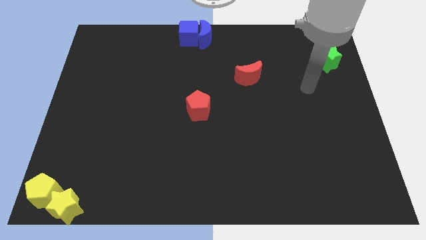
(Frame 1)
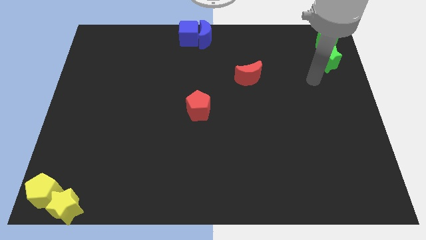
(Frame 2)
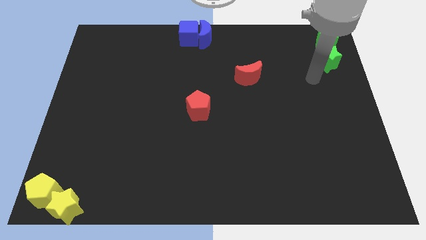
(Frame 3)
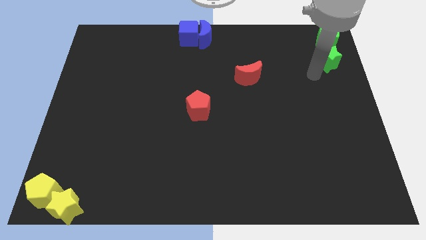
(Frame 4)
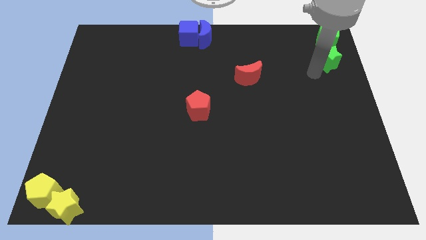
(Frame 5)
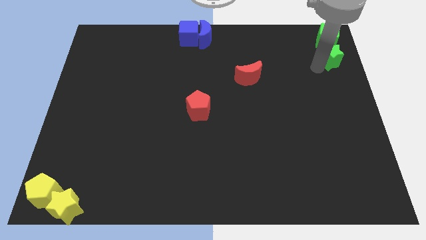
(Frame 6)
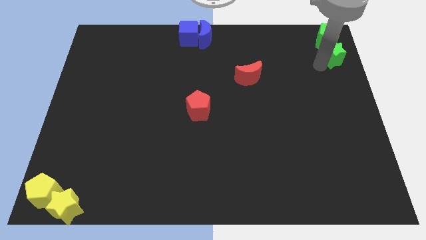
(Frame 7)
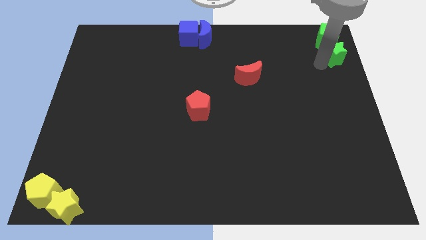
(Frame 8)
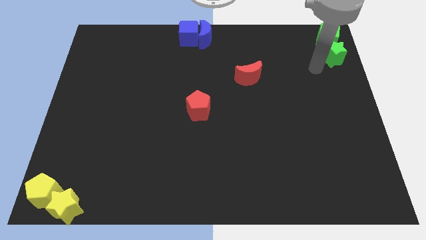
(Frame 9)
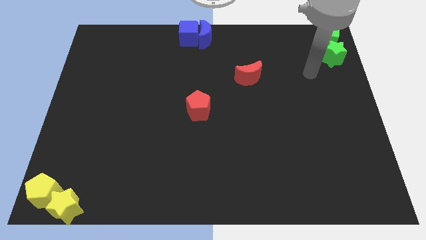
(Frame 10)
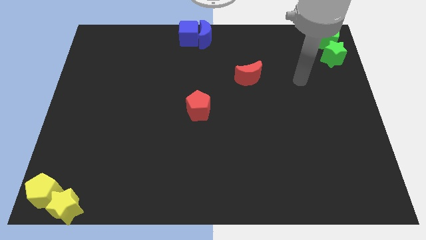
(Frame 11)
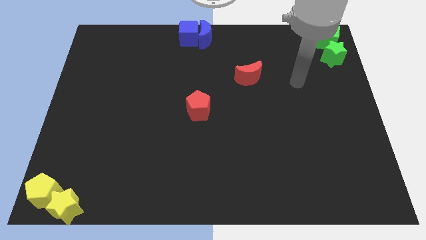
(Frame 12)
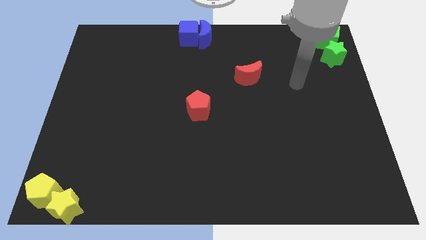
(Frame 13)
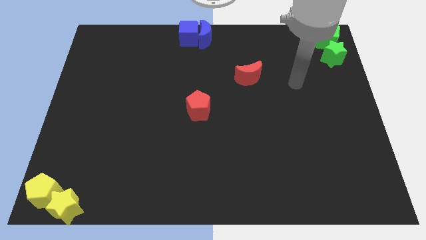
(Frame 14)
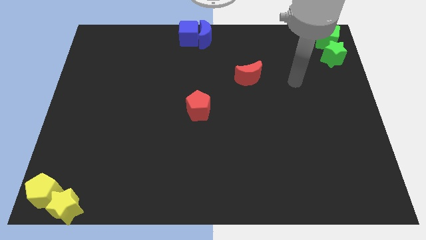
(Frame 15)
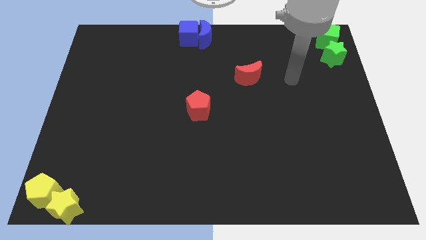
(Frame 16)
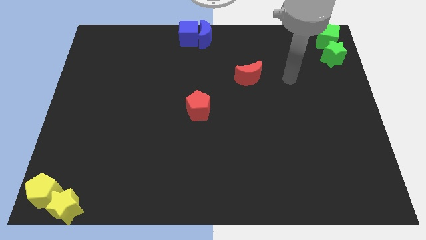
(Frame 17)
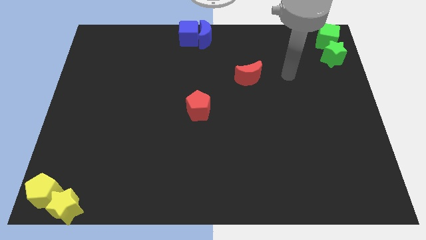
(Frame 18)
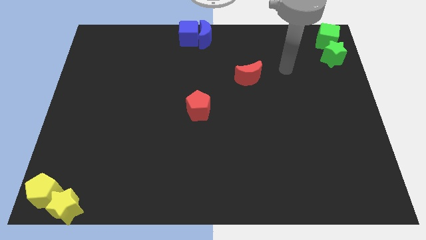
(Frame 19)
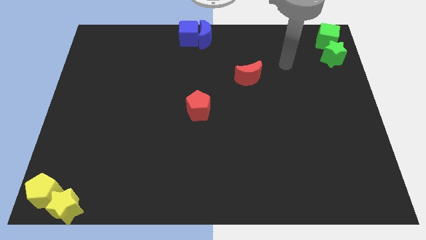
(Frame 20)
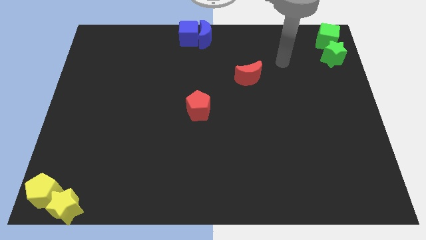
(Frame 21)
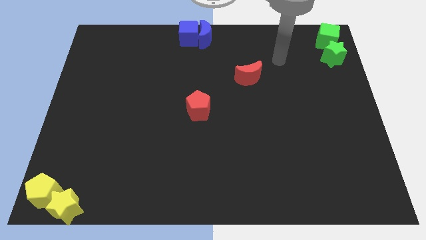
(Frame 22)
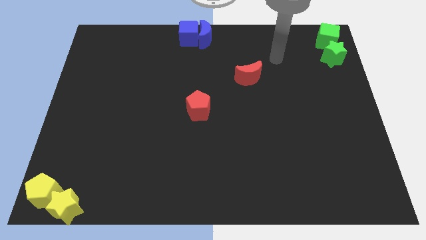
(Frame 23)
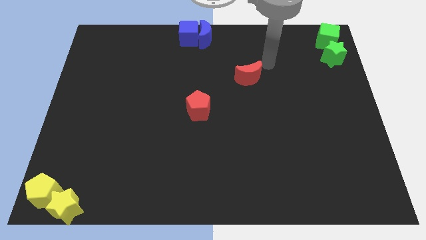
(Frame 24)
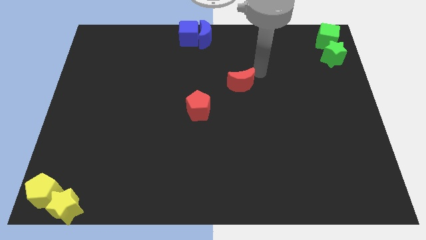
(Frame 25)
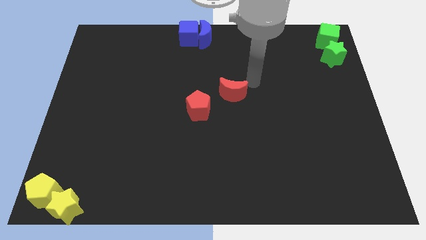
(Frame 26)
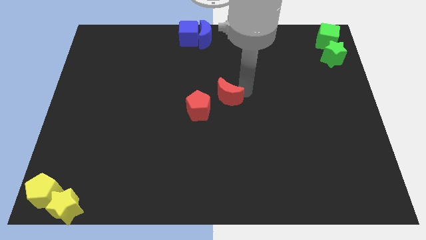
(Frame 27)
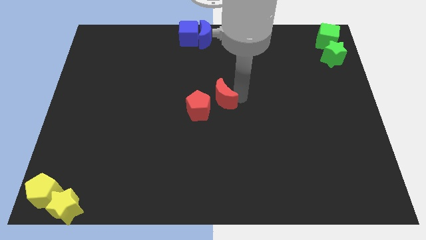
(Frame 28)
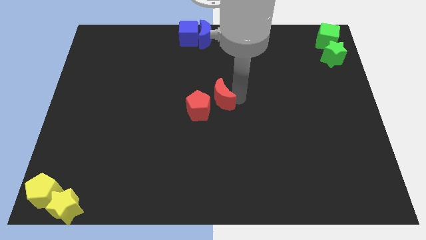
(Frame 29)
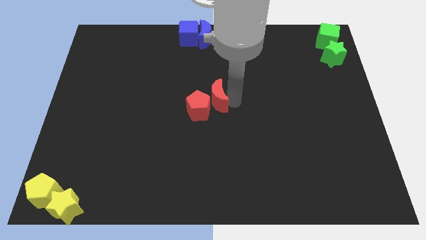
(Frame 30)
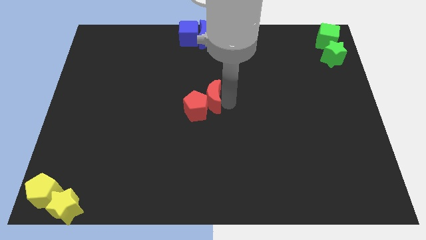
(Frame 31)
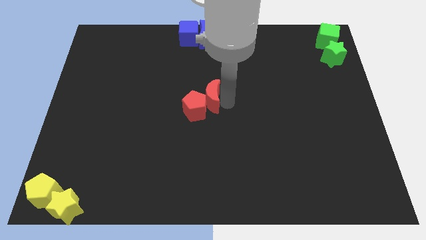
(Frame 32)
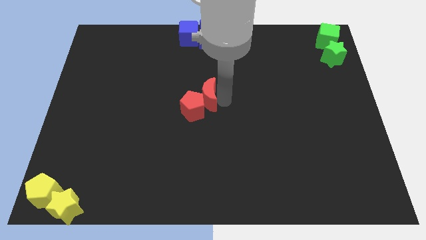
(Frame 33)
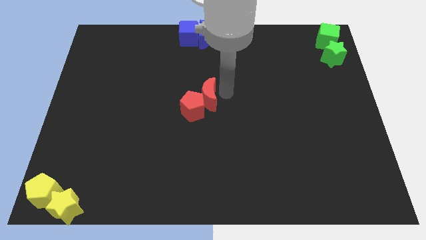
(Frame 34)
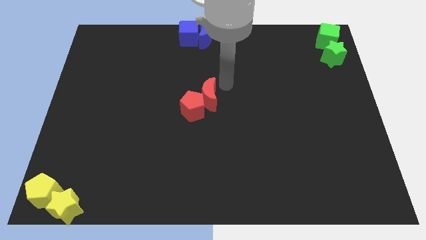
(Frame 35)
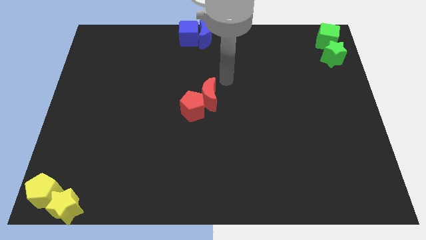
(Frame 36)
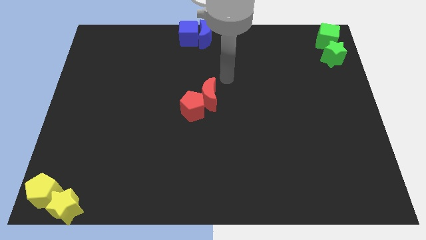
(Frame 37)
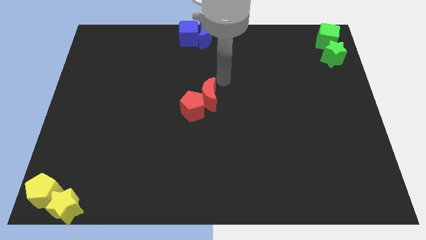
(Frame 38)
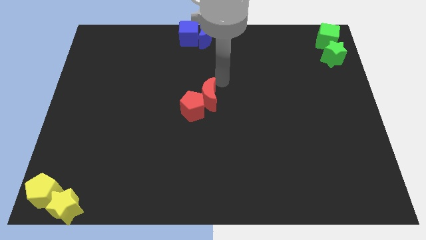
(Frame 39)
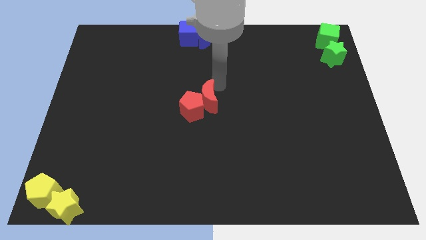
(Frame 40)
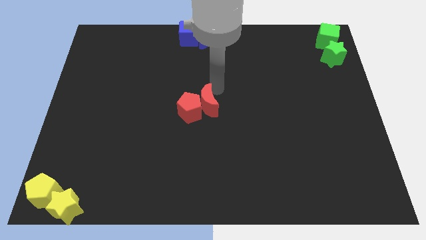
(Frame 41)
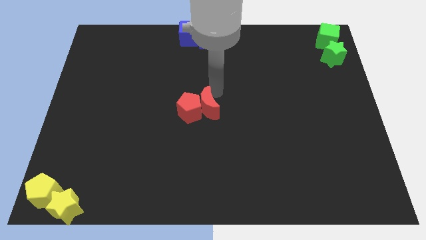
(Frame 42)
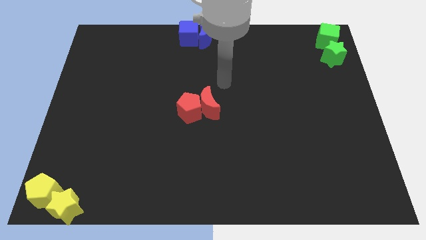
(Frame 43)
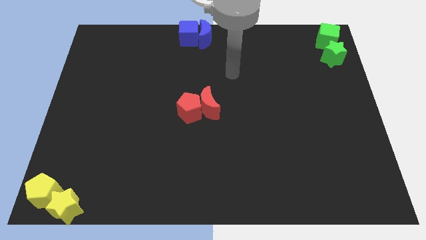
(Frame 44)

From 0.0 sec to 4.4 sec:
move red crescent into the red pentagon to the center of the board

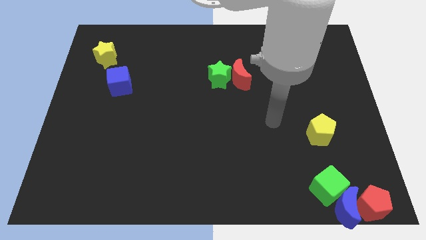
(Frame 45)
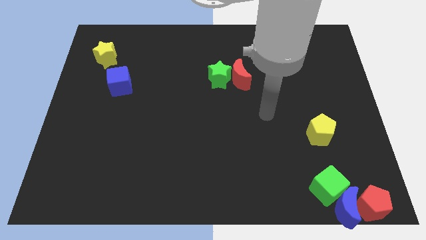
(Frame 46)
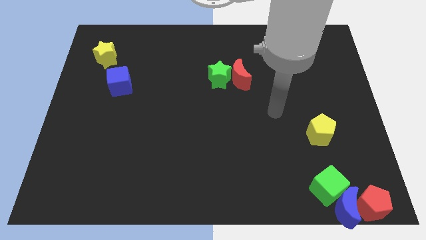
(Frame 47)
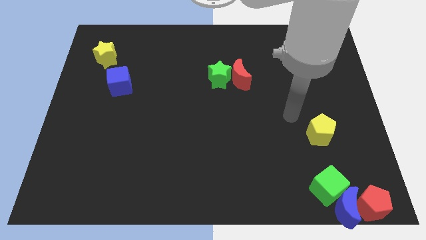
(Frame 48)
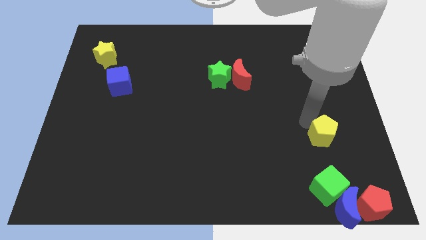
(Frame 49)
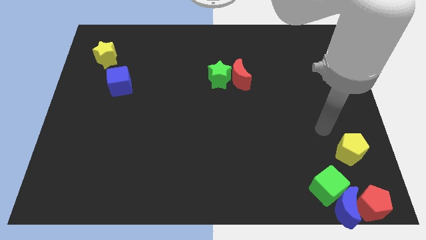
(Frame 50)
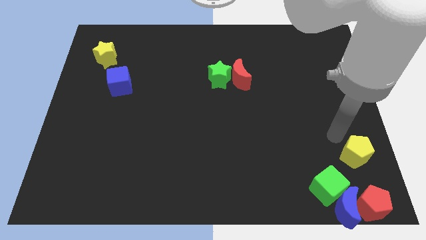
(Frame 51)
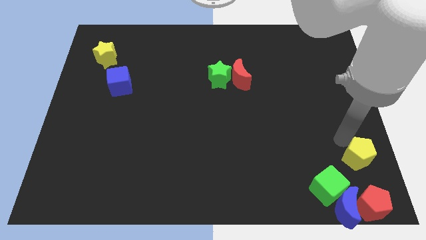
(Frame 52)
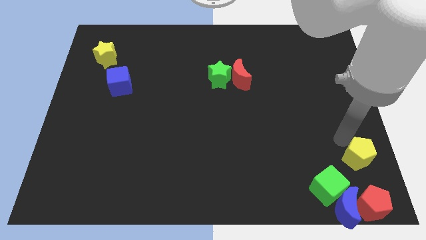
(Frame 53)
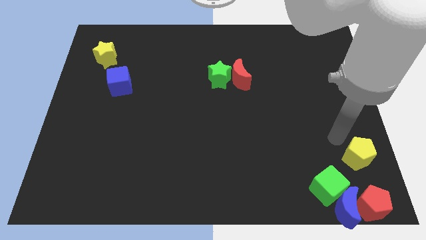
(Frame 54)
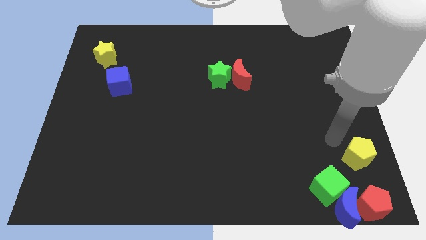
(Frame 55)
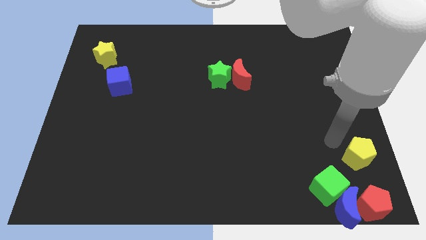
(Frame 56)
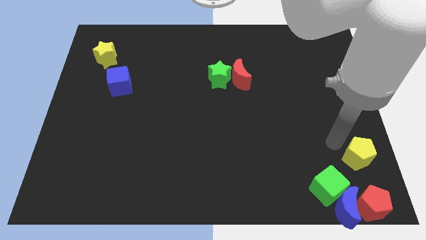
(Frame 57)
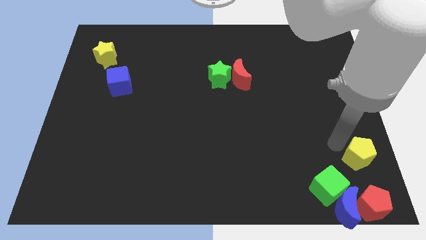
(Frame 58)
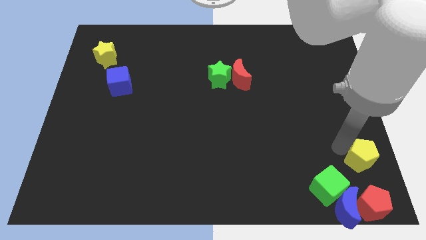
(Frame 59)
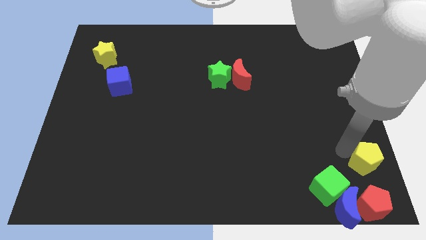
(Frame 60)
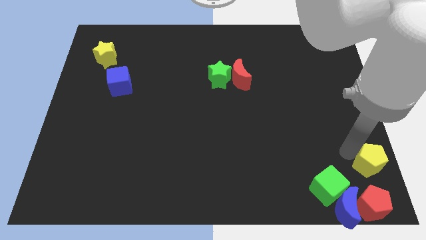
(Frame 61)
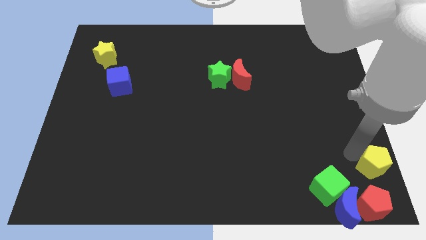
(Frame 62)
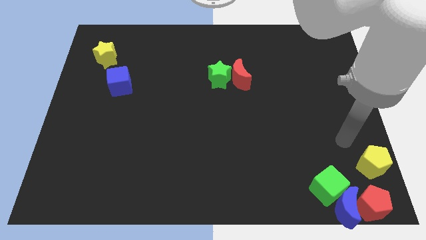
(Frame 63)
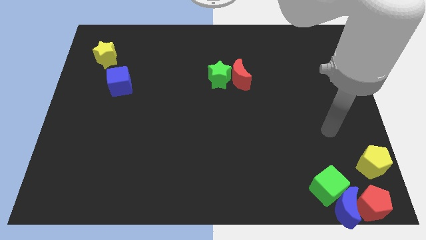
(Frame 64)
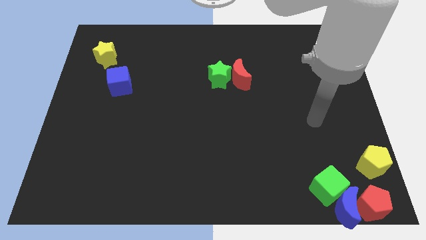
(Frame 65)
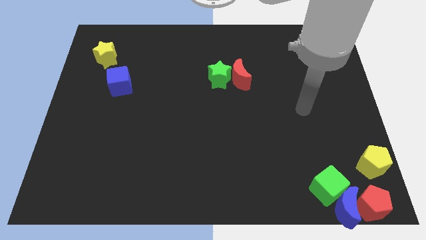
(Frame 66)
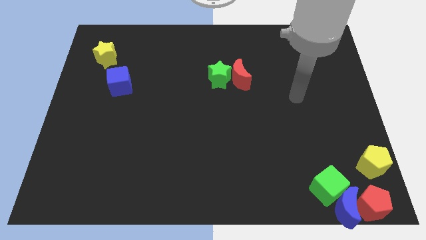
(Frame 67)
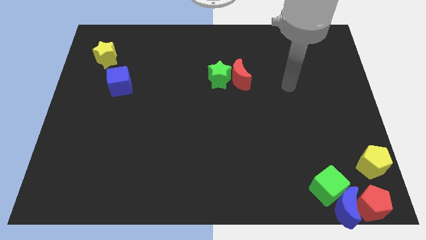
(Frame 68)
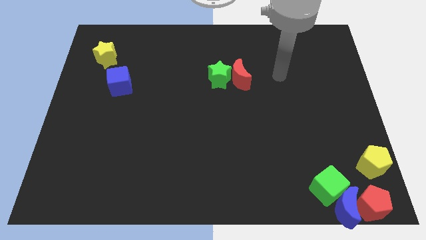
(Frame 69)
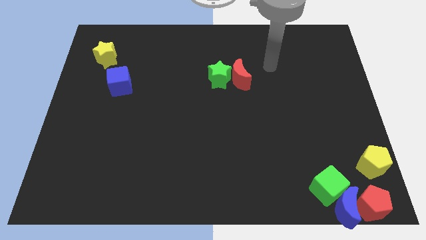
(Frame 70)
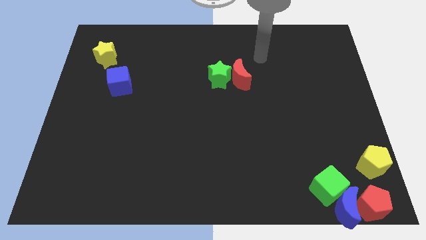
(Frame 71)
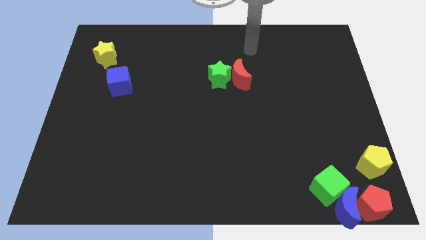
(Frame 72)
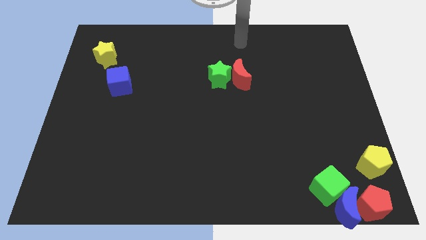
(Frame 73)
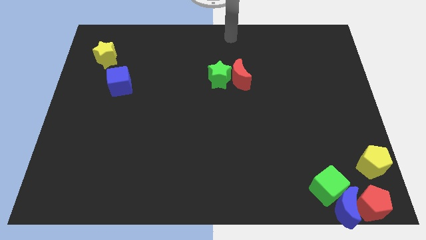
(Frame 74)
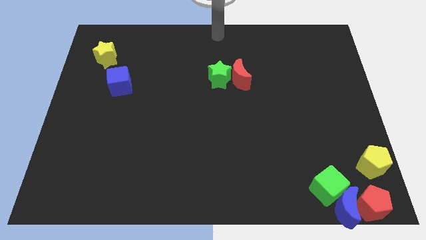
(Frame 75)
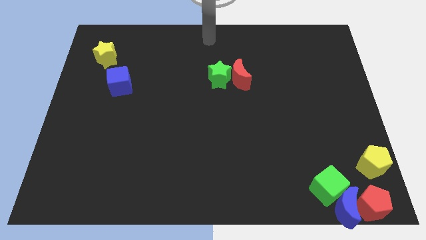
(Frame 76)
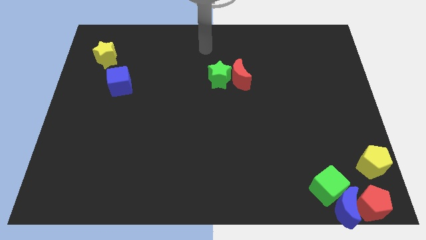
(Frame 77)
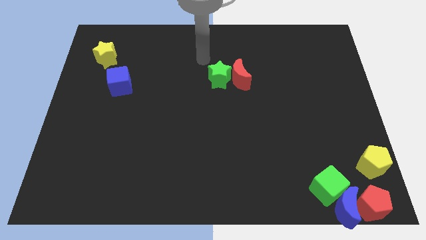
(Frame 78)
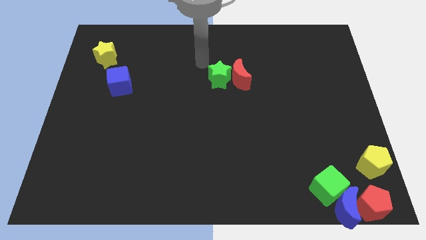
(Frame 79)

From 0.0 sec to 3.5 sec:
push the yellow pentagon to the top of the red pentagon

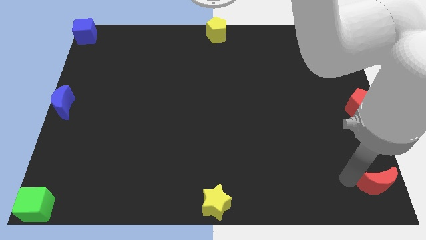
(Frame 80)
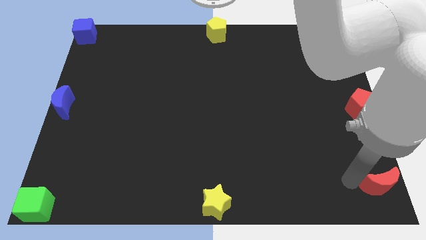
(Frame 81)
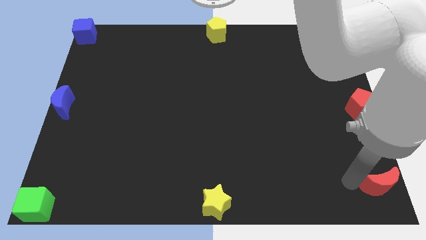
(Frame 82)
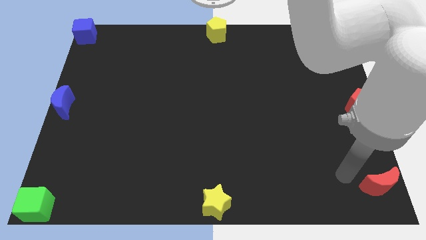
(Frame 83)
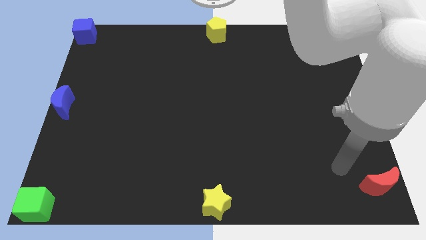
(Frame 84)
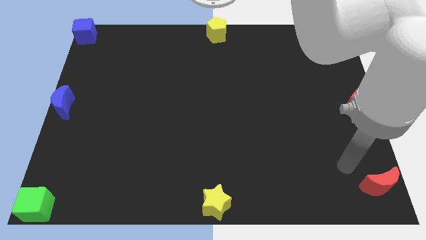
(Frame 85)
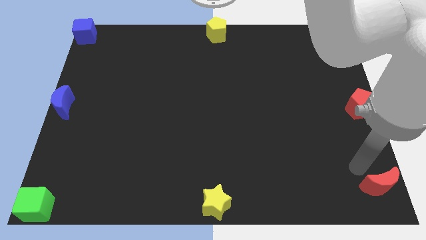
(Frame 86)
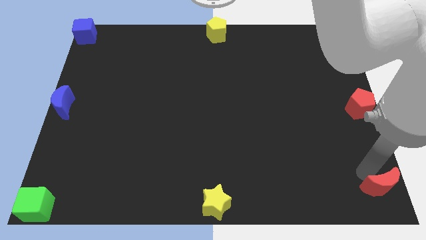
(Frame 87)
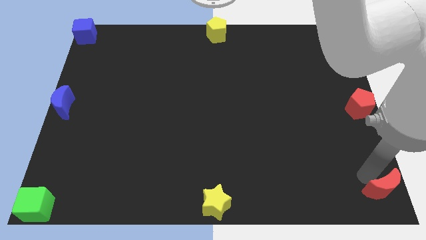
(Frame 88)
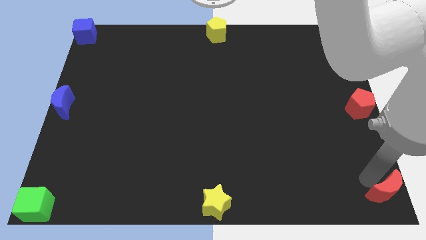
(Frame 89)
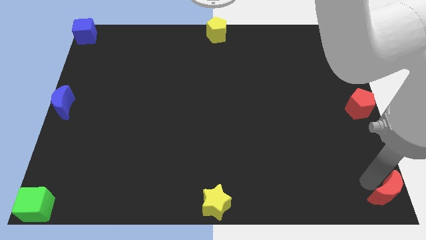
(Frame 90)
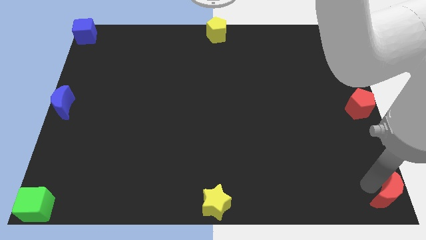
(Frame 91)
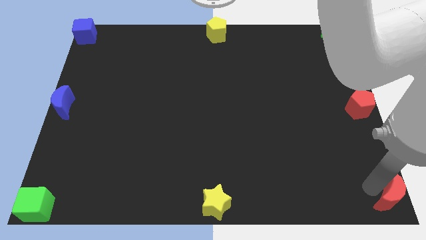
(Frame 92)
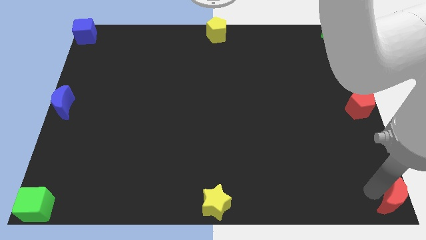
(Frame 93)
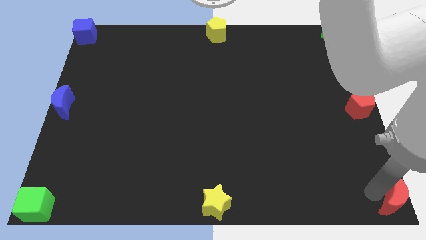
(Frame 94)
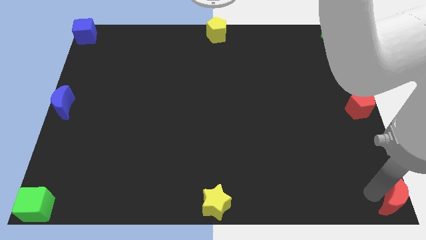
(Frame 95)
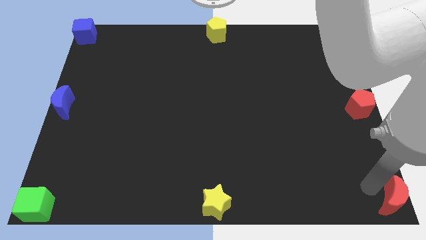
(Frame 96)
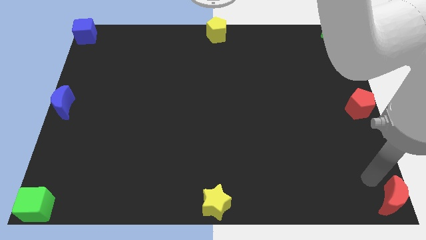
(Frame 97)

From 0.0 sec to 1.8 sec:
move the red crescent to the bottom right corner of the board
